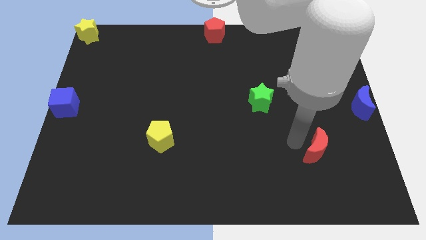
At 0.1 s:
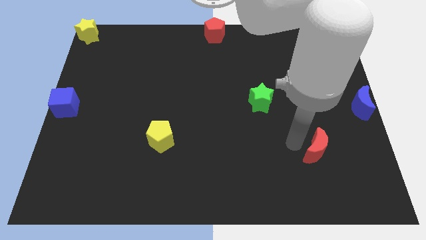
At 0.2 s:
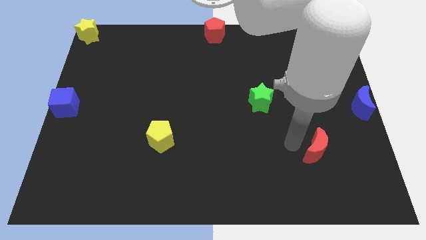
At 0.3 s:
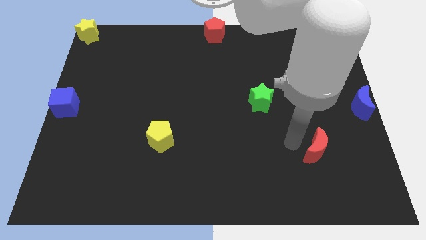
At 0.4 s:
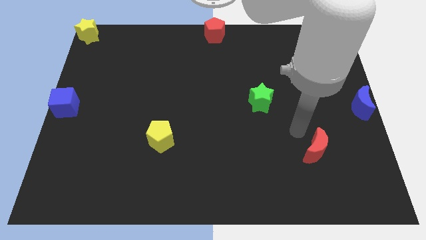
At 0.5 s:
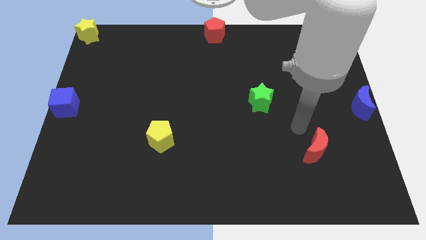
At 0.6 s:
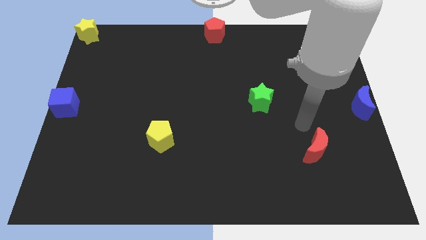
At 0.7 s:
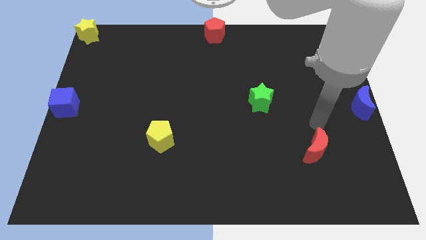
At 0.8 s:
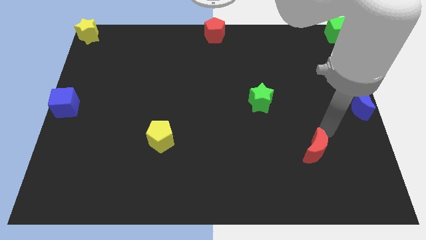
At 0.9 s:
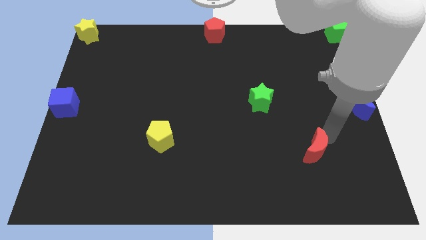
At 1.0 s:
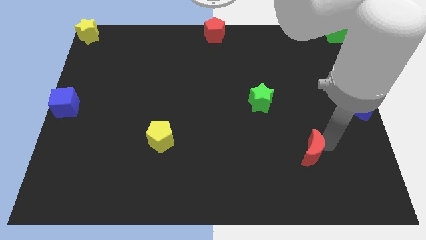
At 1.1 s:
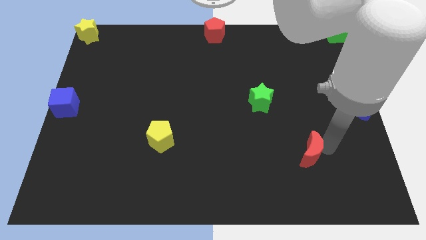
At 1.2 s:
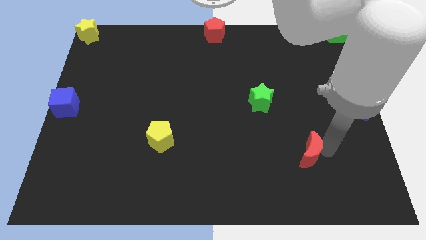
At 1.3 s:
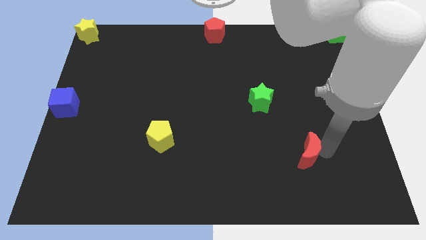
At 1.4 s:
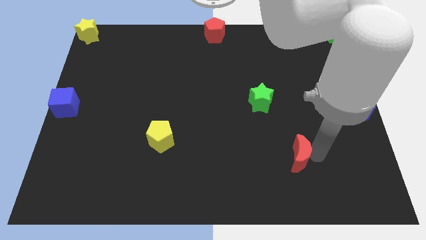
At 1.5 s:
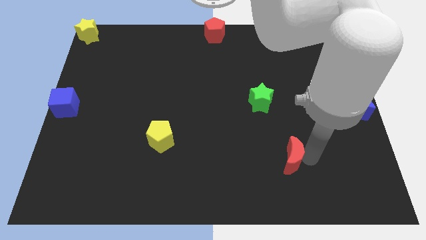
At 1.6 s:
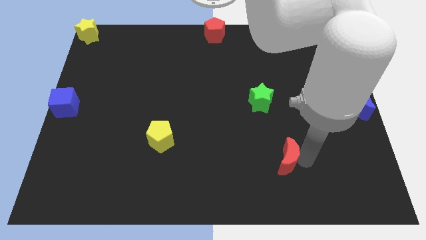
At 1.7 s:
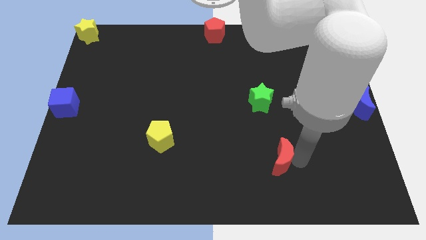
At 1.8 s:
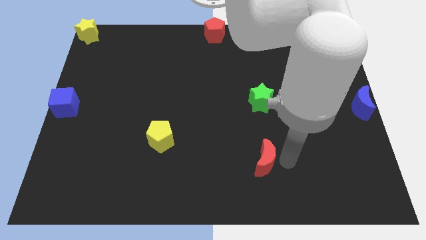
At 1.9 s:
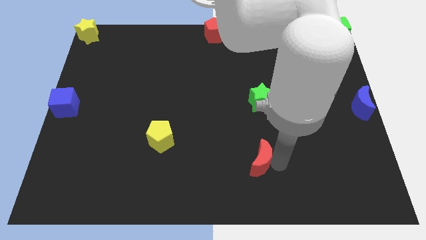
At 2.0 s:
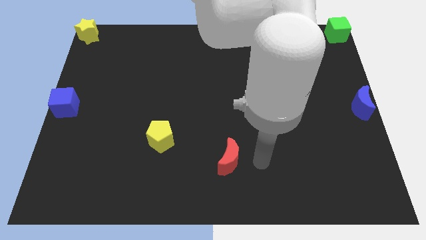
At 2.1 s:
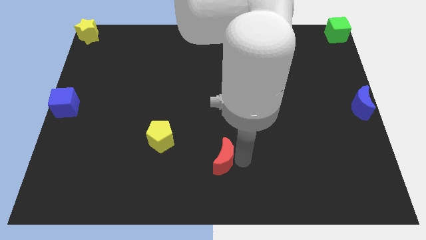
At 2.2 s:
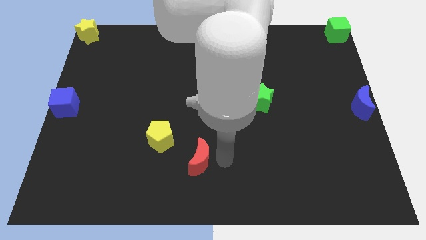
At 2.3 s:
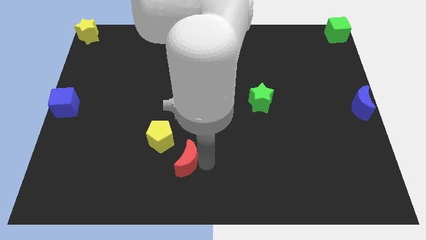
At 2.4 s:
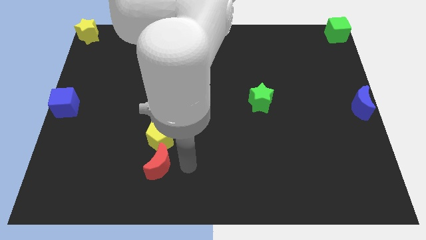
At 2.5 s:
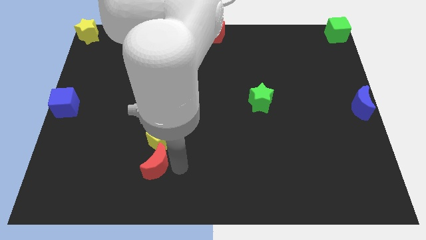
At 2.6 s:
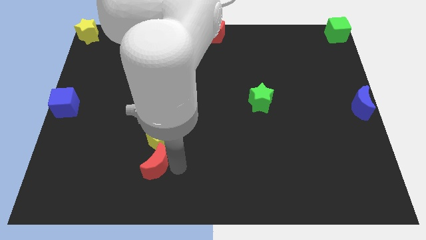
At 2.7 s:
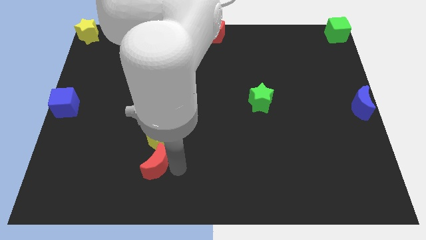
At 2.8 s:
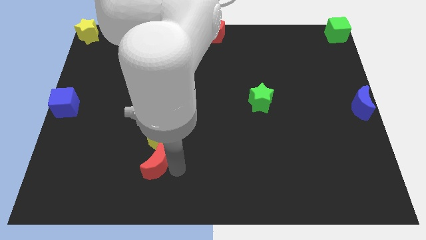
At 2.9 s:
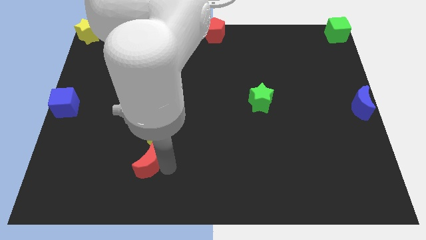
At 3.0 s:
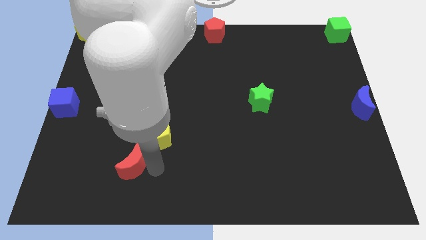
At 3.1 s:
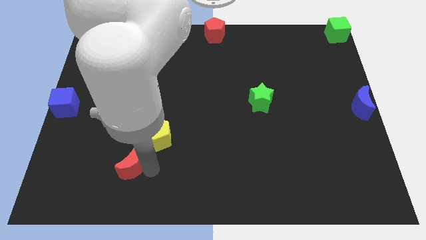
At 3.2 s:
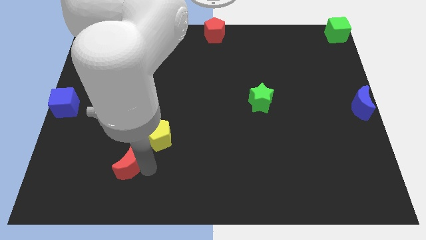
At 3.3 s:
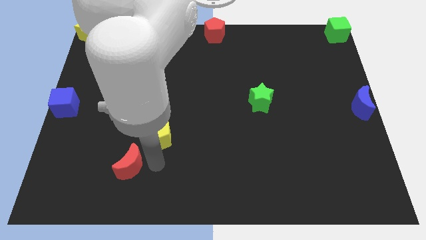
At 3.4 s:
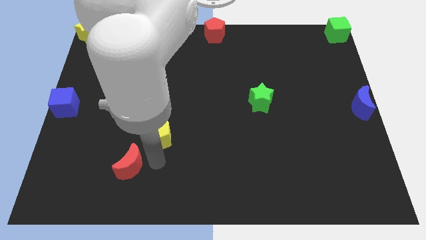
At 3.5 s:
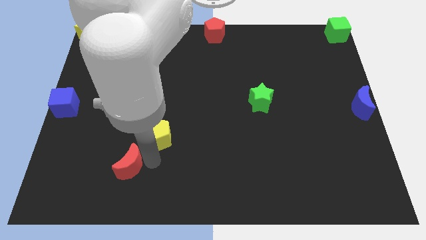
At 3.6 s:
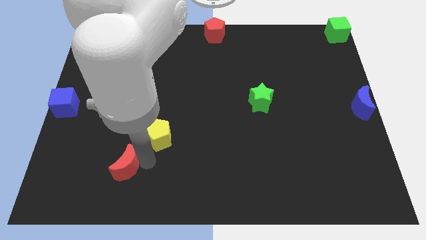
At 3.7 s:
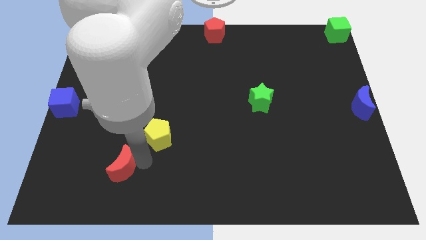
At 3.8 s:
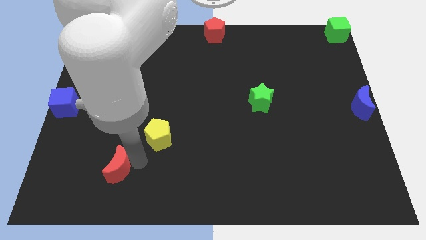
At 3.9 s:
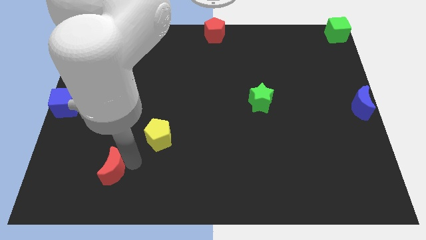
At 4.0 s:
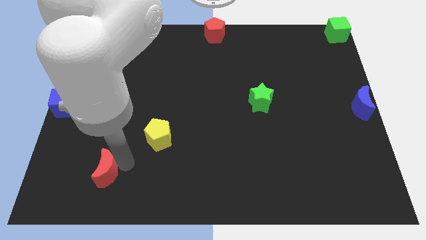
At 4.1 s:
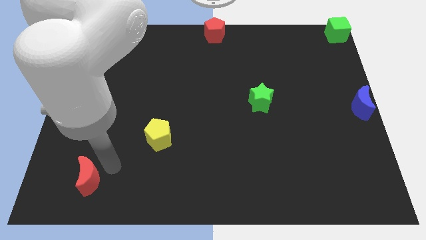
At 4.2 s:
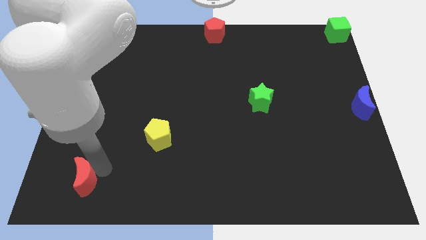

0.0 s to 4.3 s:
move red crescent to the left

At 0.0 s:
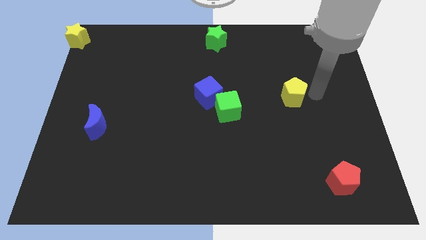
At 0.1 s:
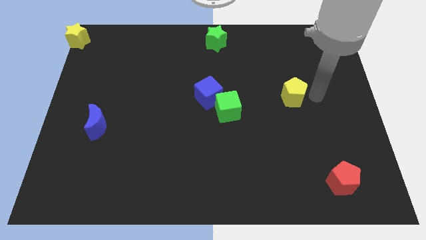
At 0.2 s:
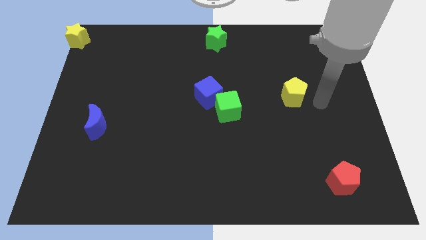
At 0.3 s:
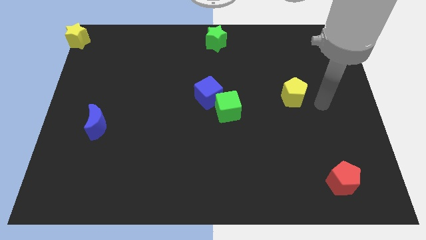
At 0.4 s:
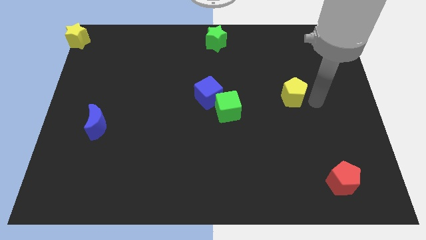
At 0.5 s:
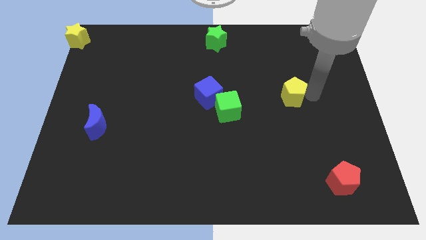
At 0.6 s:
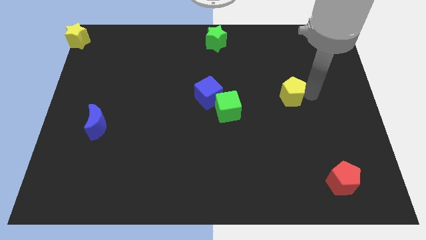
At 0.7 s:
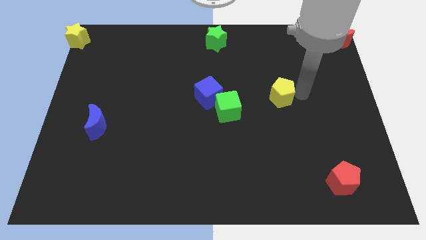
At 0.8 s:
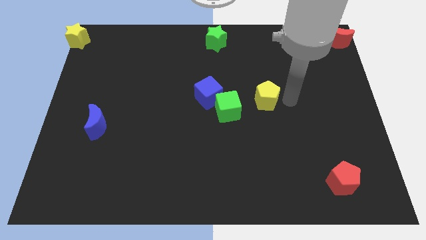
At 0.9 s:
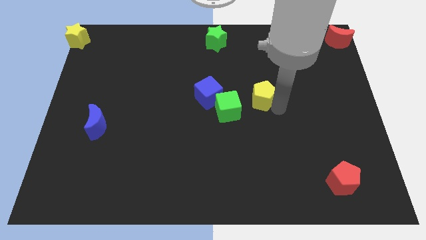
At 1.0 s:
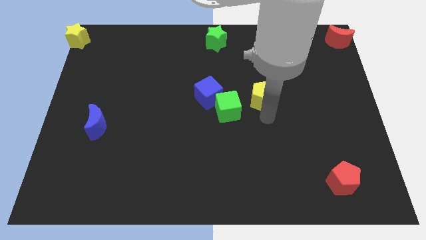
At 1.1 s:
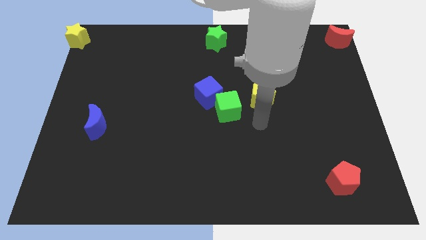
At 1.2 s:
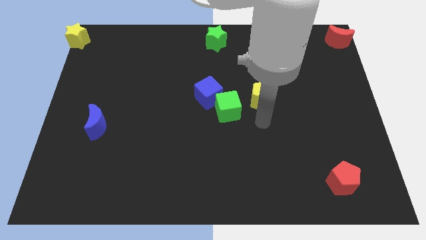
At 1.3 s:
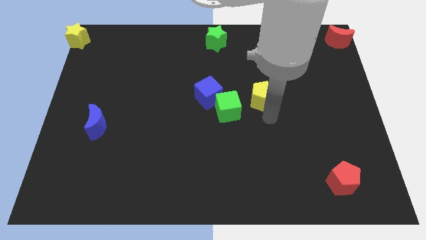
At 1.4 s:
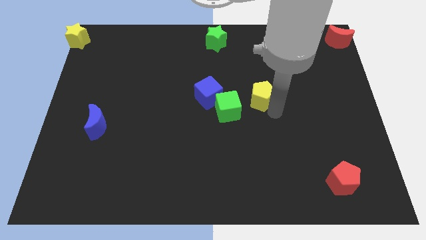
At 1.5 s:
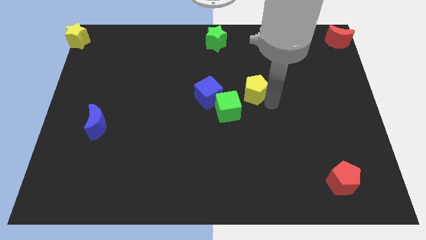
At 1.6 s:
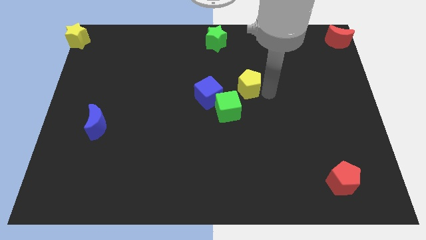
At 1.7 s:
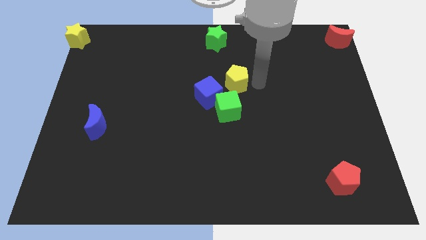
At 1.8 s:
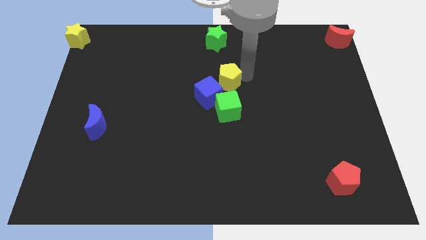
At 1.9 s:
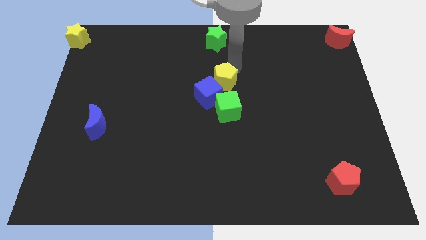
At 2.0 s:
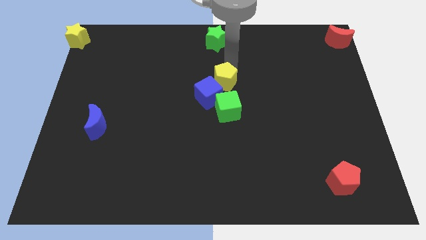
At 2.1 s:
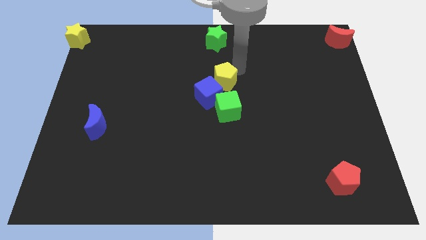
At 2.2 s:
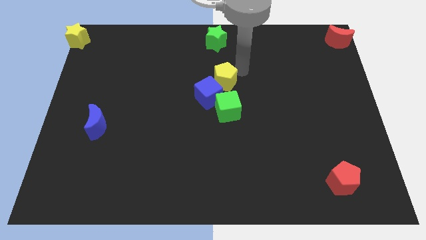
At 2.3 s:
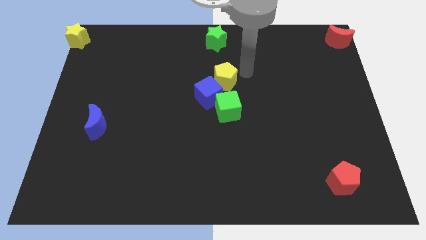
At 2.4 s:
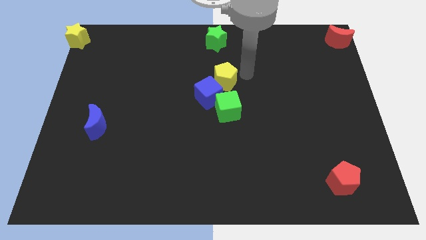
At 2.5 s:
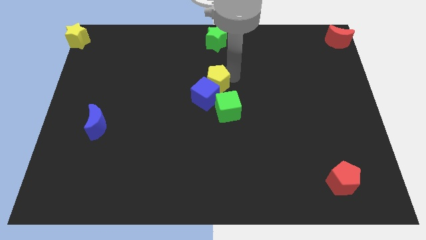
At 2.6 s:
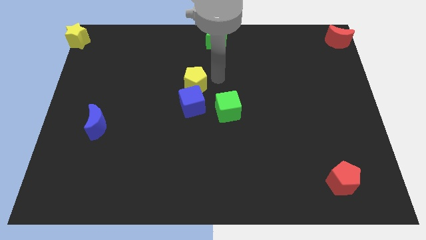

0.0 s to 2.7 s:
push the yellow pentagon into the blue cube

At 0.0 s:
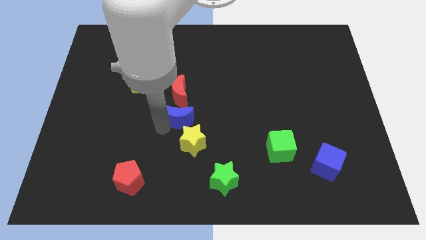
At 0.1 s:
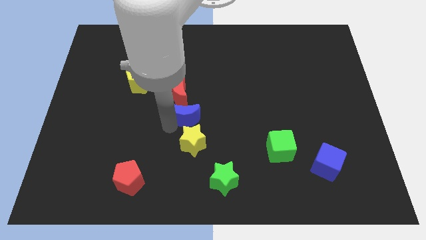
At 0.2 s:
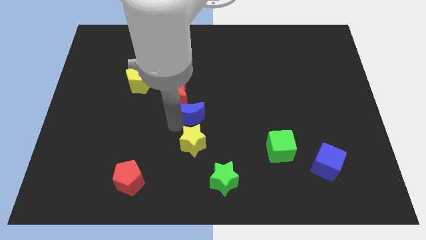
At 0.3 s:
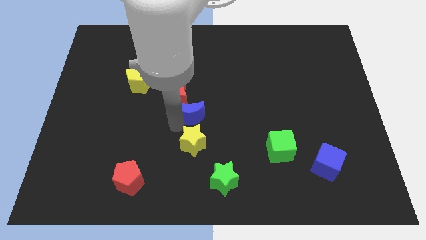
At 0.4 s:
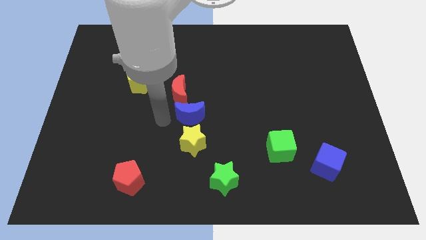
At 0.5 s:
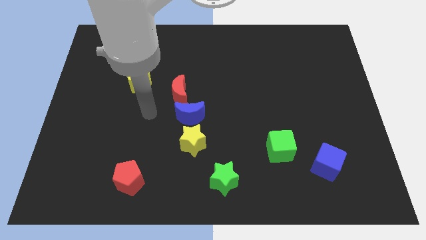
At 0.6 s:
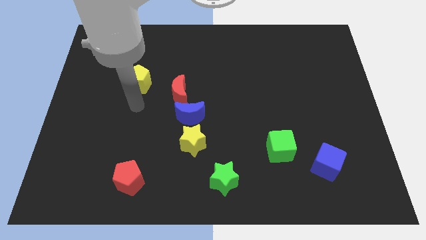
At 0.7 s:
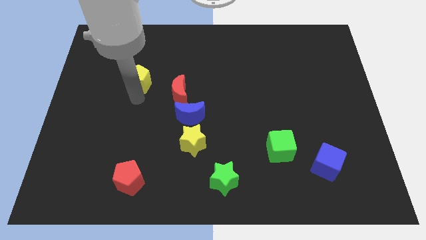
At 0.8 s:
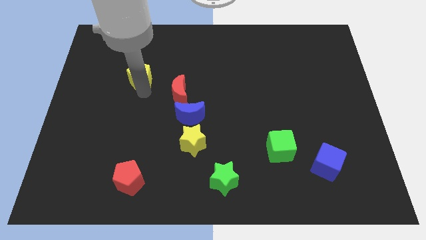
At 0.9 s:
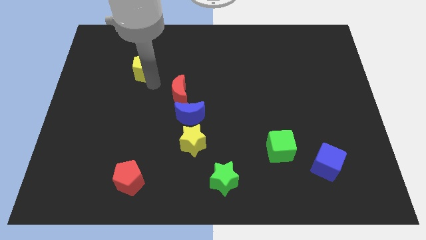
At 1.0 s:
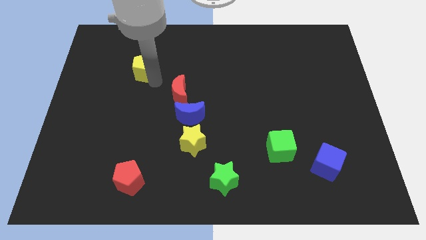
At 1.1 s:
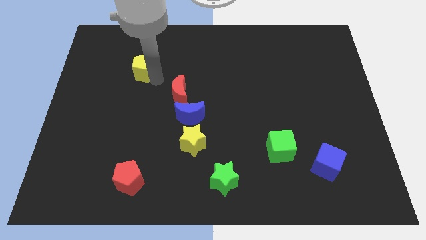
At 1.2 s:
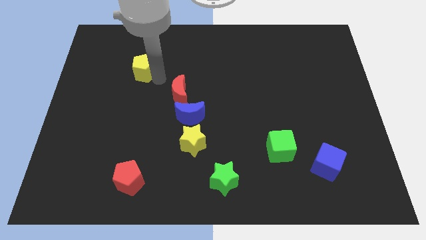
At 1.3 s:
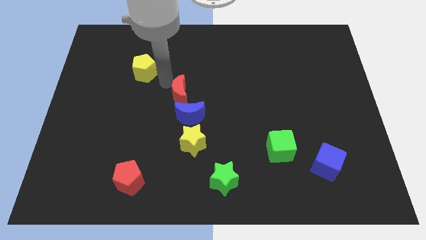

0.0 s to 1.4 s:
push the blue moon to the center of the board

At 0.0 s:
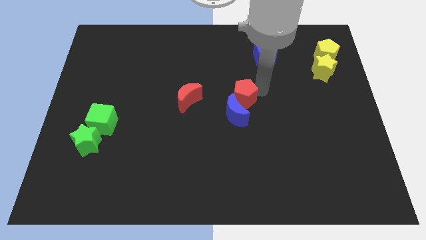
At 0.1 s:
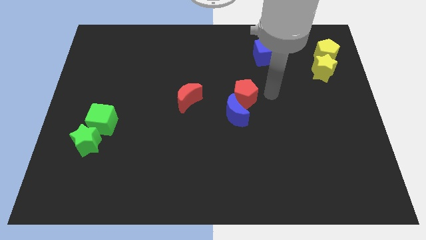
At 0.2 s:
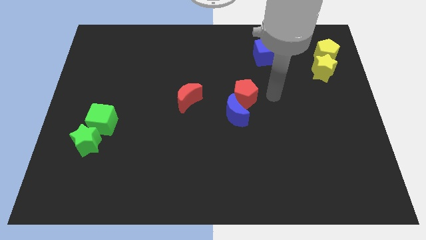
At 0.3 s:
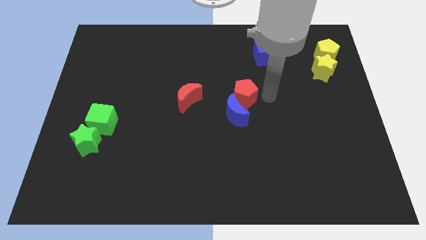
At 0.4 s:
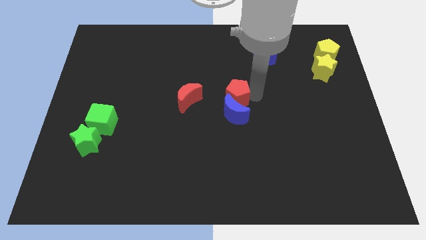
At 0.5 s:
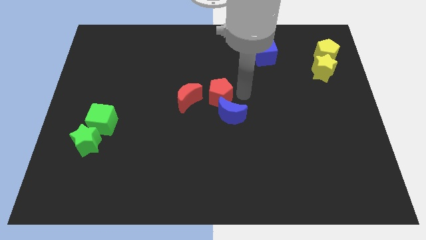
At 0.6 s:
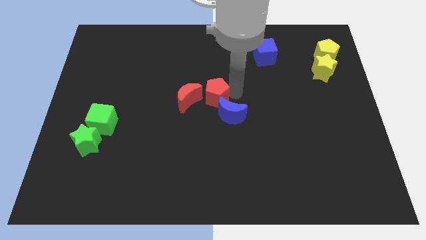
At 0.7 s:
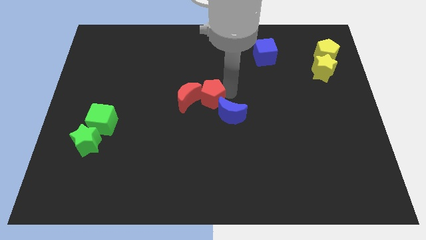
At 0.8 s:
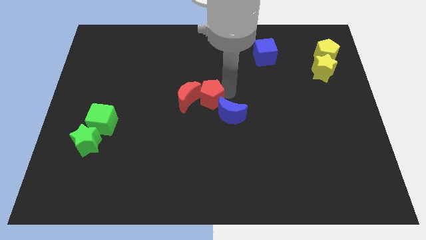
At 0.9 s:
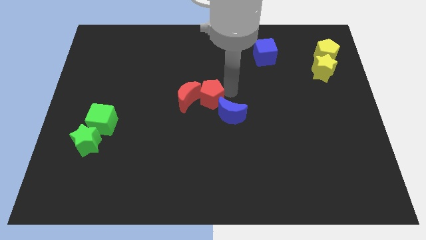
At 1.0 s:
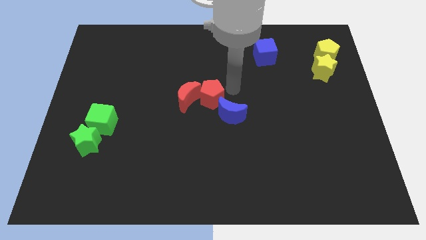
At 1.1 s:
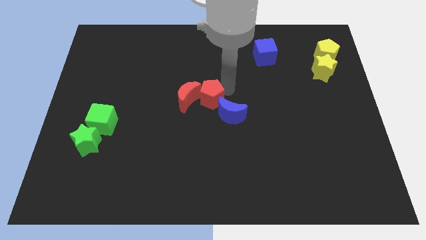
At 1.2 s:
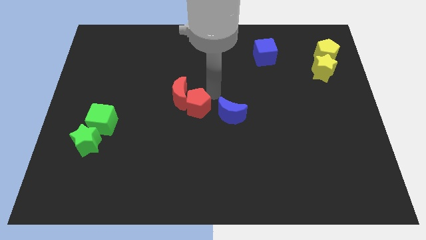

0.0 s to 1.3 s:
slide the red pentagon into the red moon
